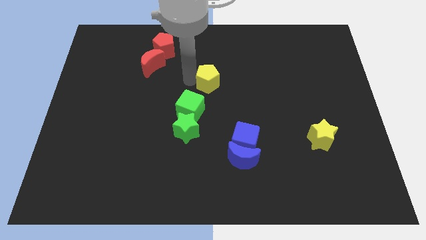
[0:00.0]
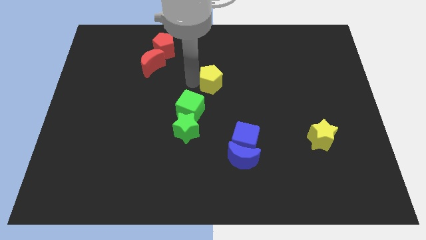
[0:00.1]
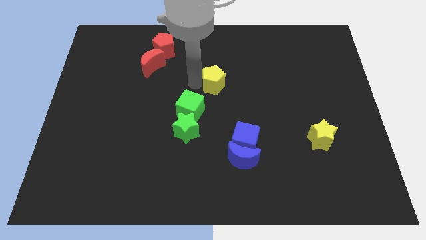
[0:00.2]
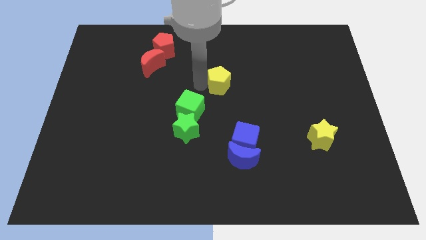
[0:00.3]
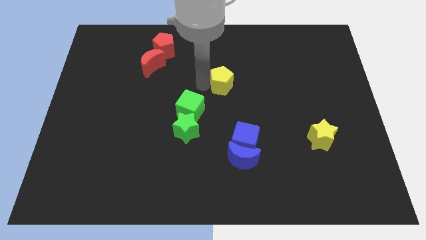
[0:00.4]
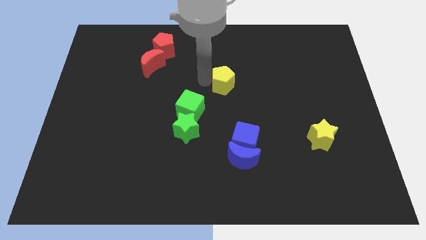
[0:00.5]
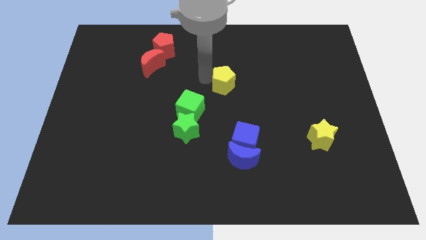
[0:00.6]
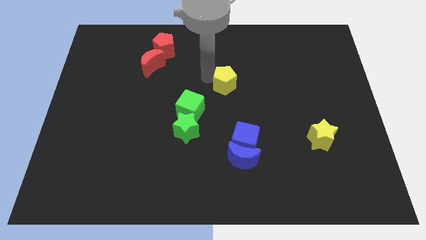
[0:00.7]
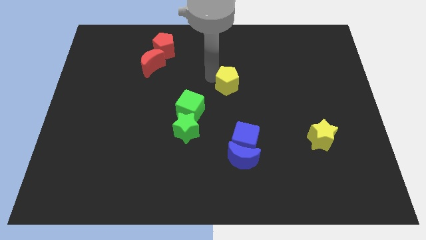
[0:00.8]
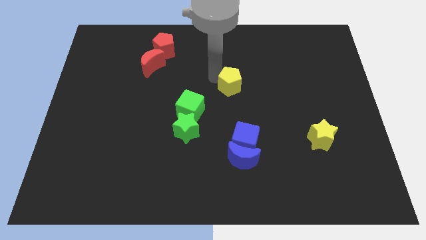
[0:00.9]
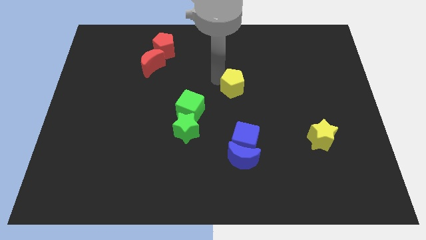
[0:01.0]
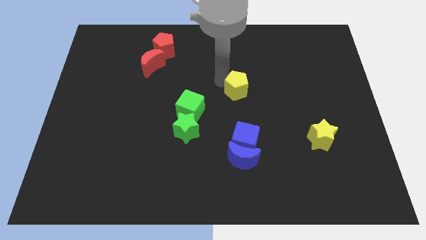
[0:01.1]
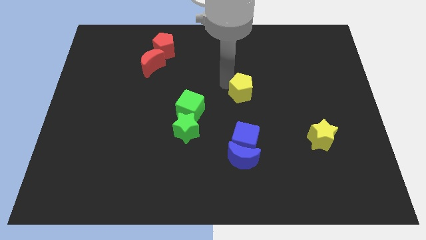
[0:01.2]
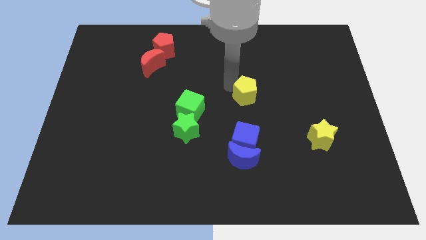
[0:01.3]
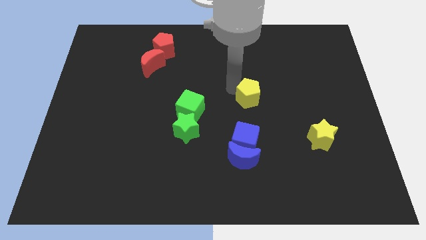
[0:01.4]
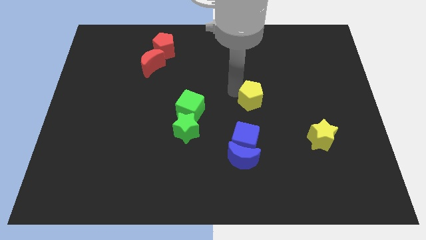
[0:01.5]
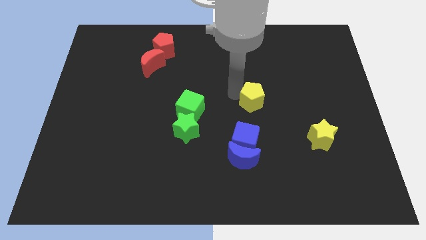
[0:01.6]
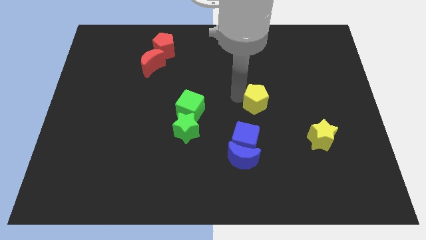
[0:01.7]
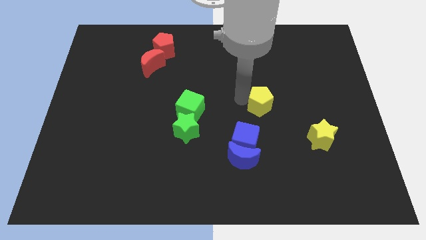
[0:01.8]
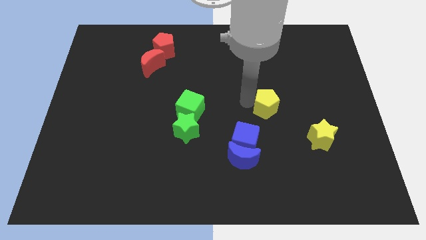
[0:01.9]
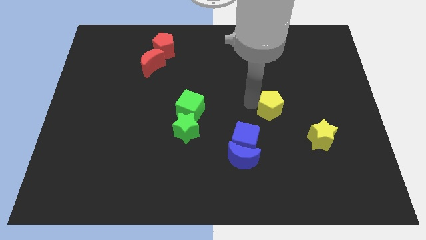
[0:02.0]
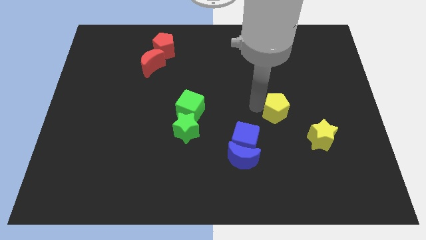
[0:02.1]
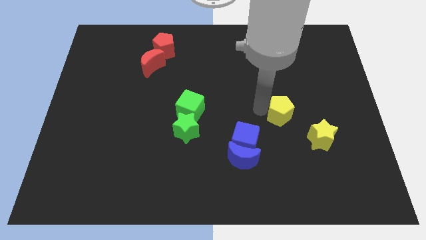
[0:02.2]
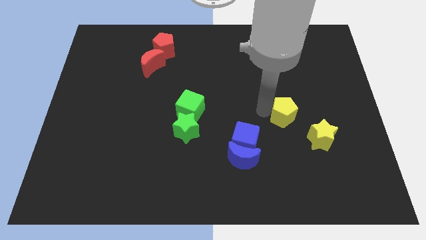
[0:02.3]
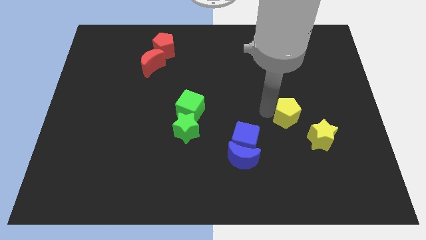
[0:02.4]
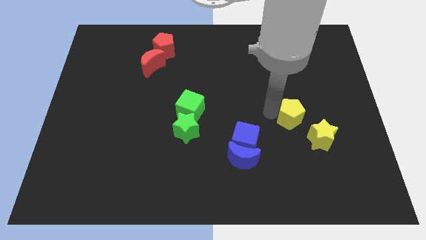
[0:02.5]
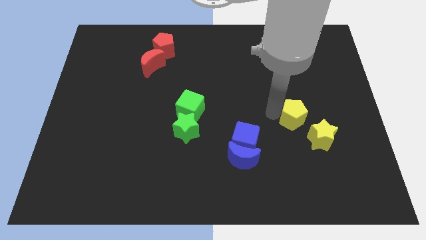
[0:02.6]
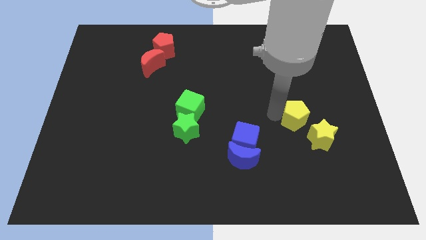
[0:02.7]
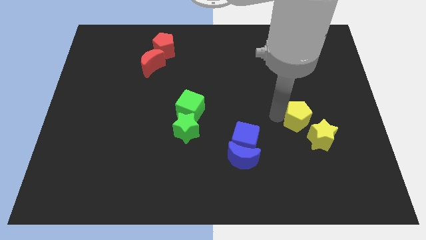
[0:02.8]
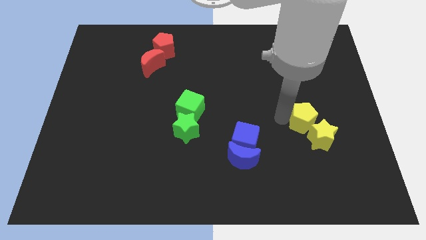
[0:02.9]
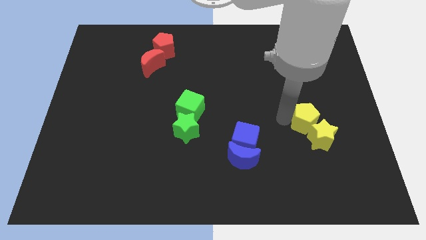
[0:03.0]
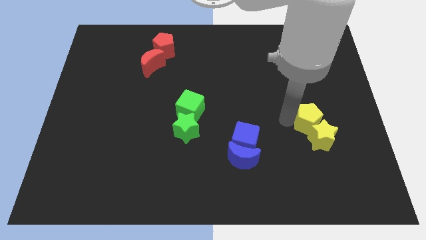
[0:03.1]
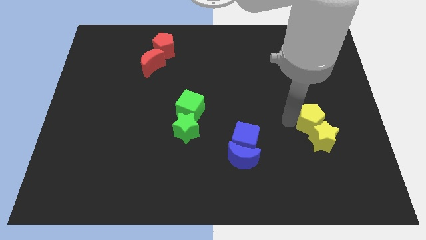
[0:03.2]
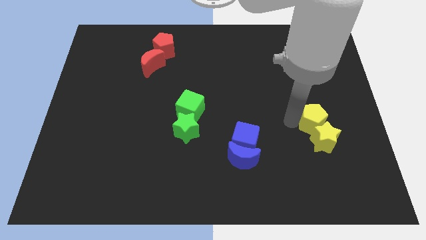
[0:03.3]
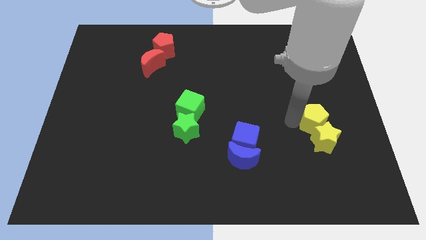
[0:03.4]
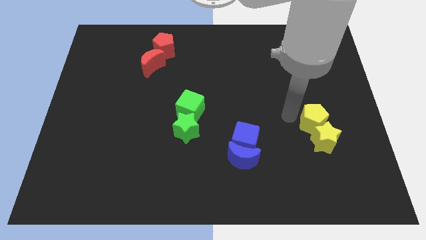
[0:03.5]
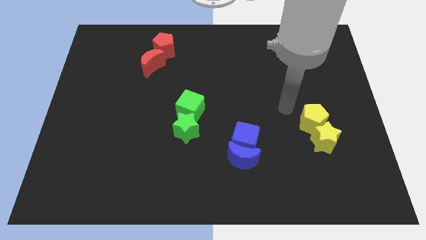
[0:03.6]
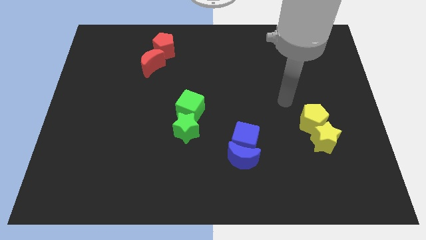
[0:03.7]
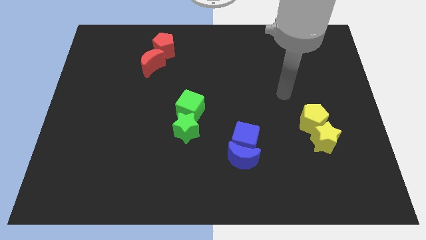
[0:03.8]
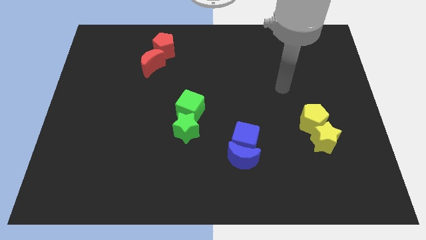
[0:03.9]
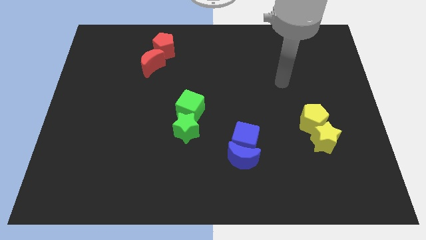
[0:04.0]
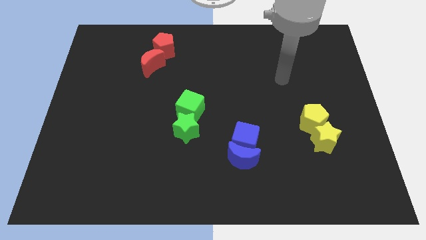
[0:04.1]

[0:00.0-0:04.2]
touch yellow star with yellow pentagon

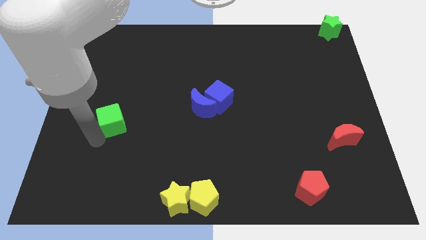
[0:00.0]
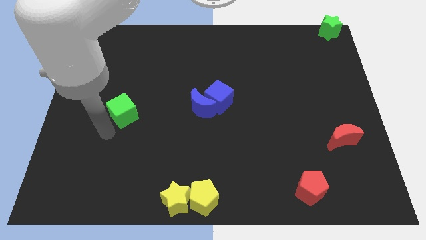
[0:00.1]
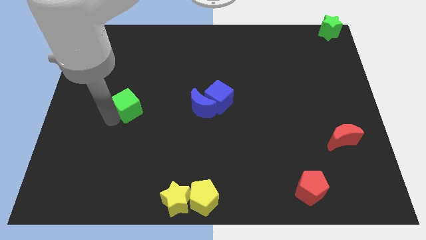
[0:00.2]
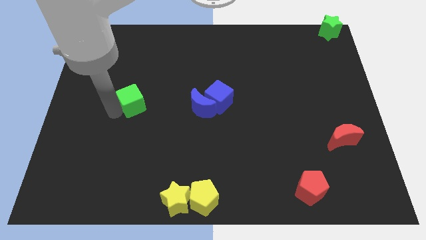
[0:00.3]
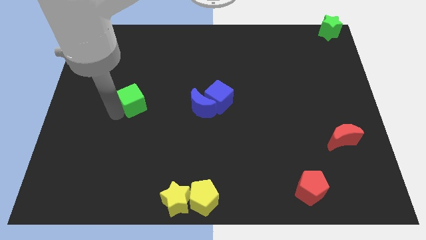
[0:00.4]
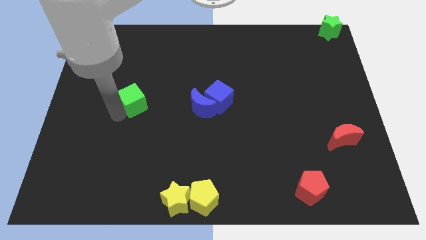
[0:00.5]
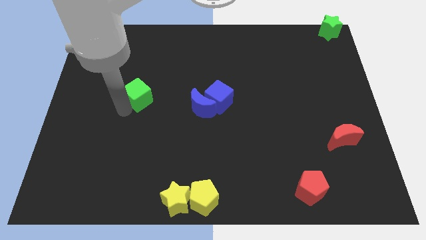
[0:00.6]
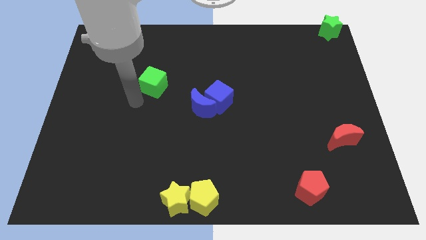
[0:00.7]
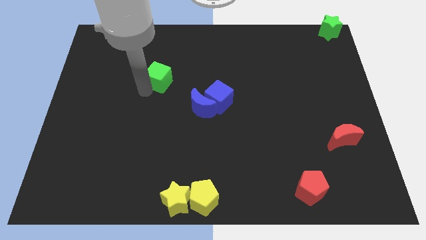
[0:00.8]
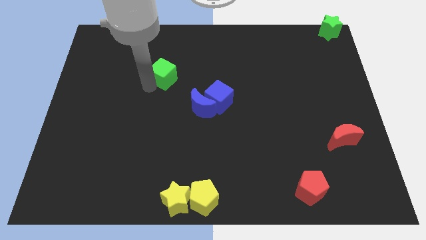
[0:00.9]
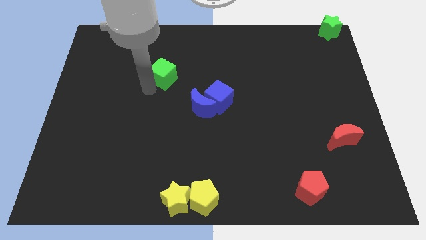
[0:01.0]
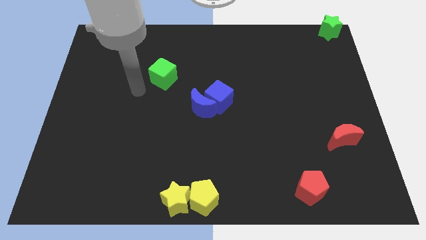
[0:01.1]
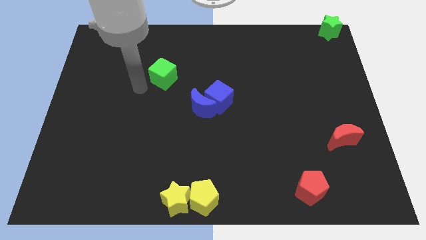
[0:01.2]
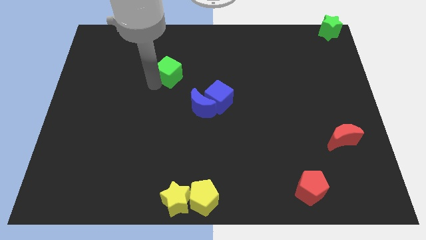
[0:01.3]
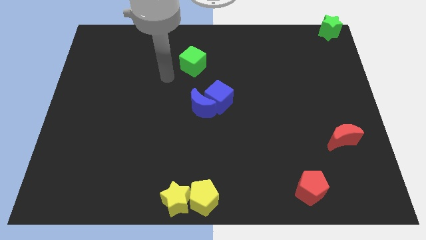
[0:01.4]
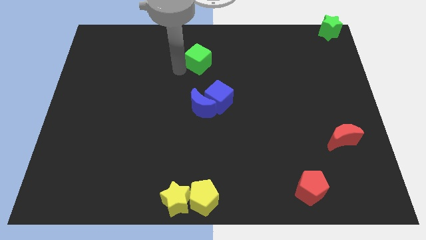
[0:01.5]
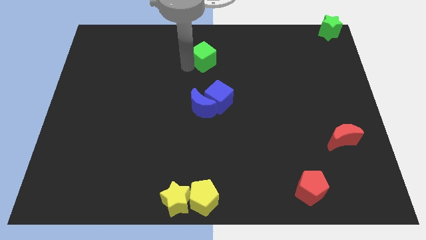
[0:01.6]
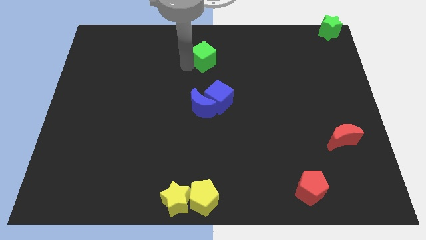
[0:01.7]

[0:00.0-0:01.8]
move the green cube vertically to the blue blocks

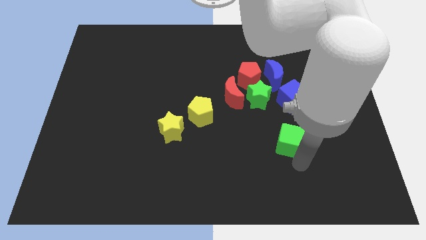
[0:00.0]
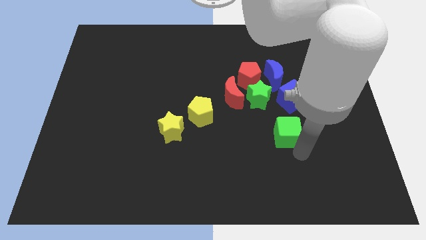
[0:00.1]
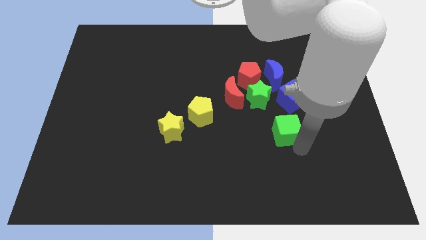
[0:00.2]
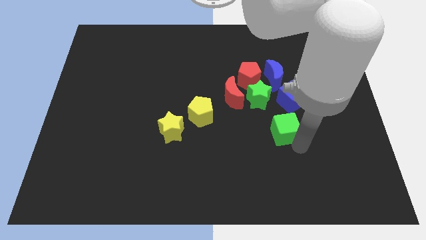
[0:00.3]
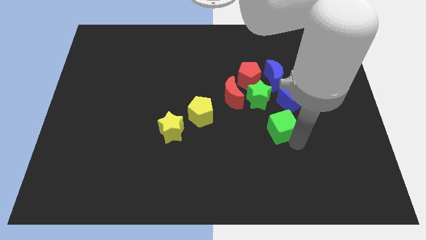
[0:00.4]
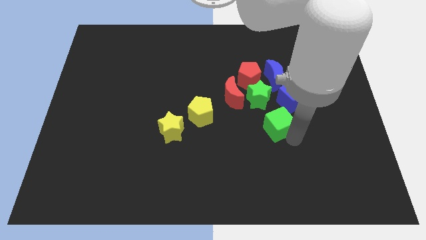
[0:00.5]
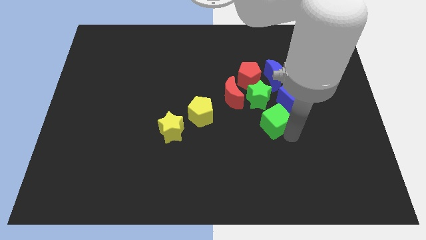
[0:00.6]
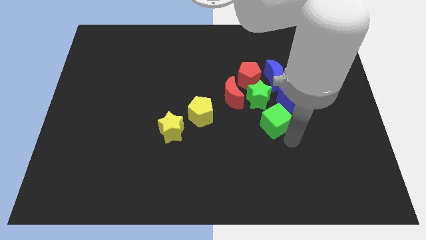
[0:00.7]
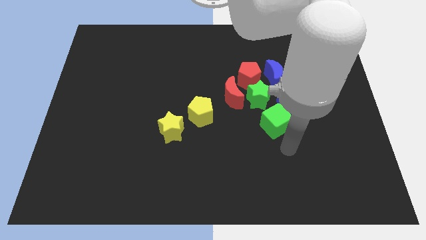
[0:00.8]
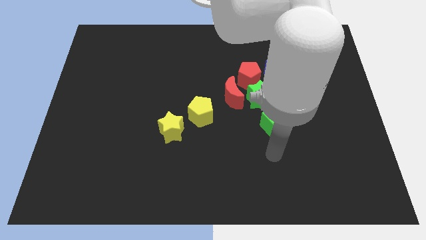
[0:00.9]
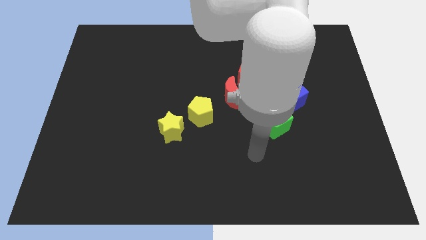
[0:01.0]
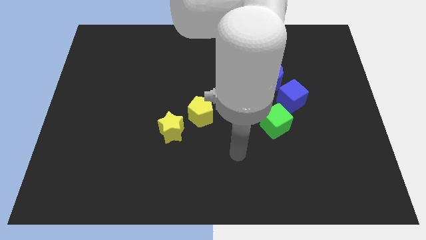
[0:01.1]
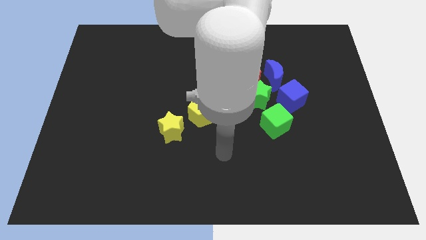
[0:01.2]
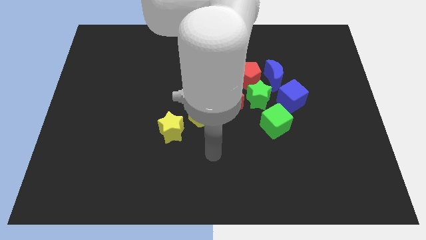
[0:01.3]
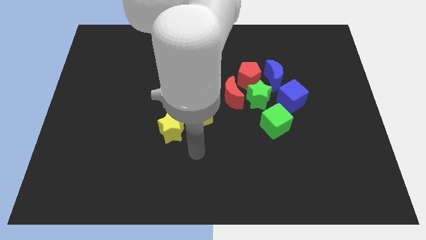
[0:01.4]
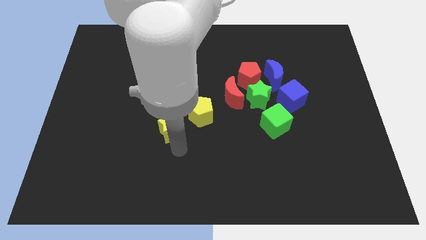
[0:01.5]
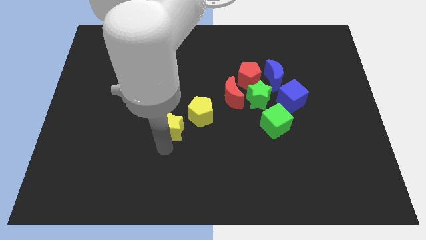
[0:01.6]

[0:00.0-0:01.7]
place green cube at the right bottom of the green star

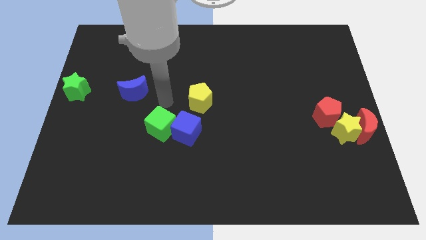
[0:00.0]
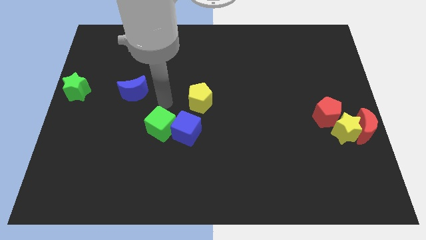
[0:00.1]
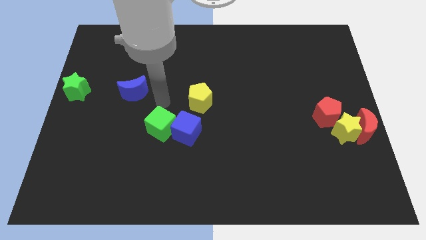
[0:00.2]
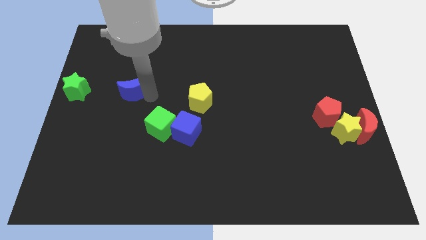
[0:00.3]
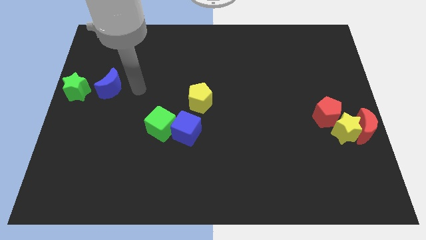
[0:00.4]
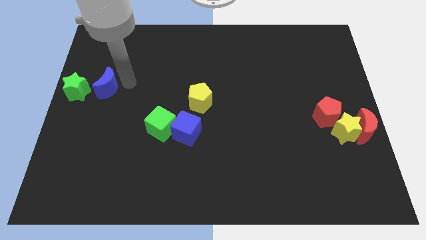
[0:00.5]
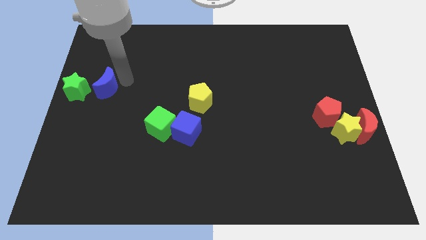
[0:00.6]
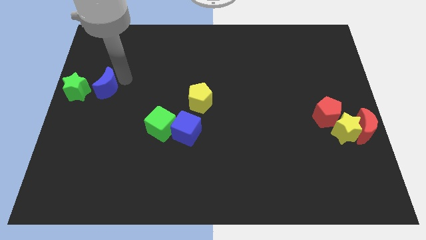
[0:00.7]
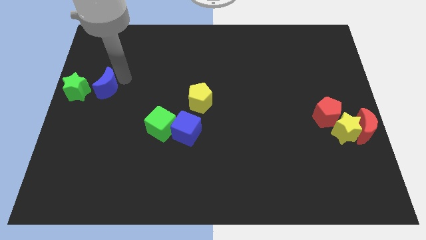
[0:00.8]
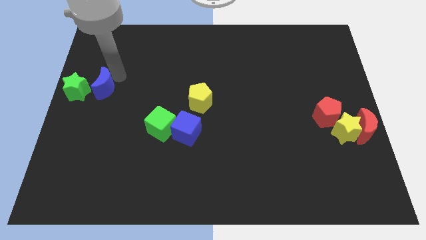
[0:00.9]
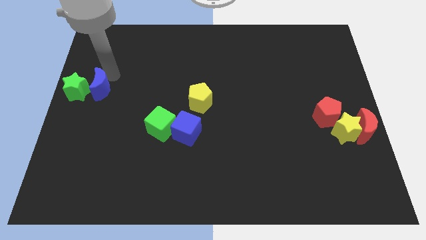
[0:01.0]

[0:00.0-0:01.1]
move the blue crescent to the right of the green star

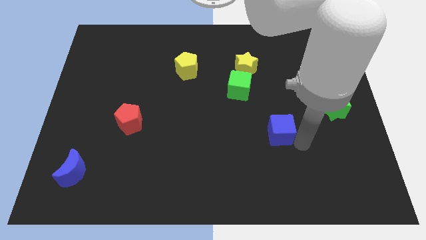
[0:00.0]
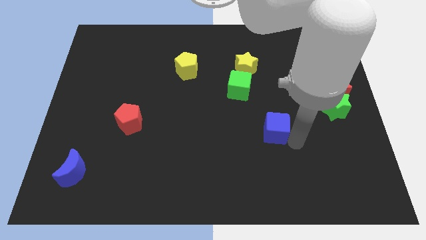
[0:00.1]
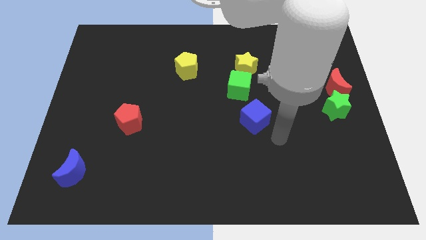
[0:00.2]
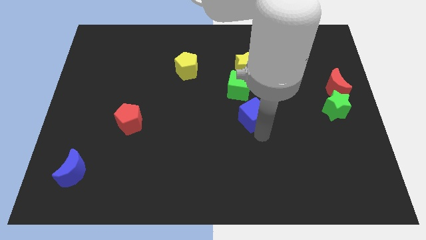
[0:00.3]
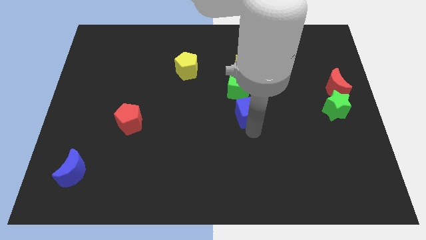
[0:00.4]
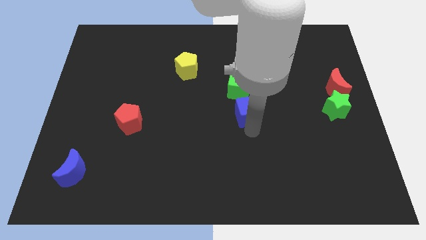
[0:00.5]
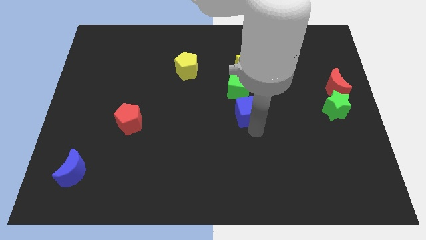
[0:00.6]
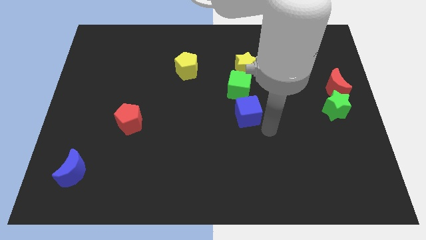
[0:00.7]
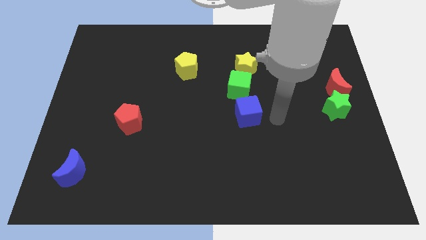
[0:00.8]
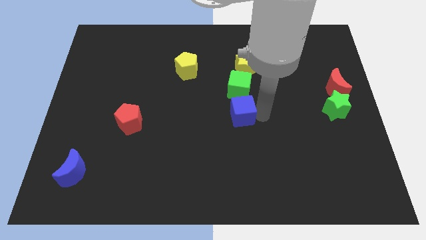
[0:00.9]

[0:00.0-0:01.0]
move the blue cube below the green cube
